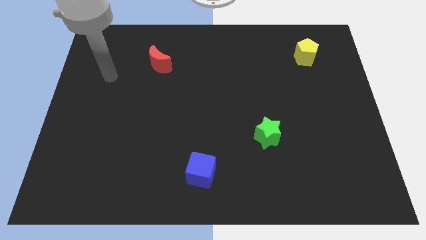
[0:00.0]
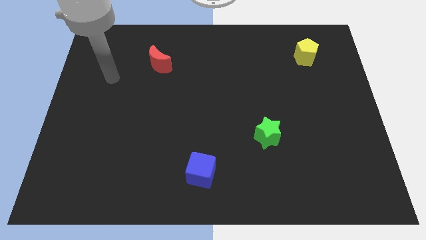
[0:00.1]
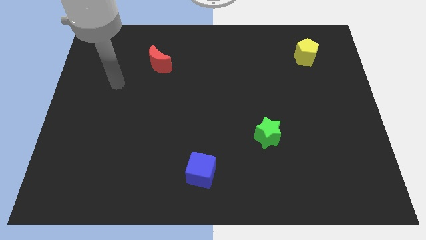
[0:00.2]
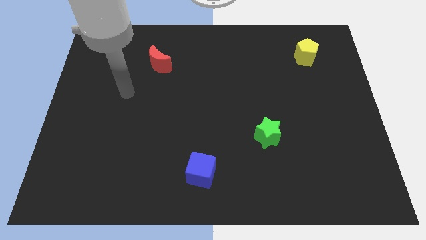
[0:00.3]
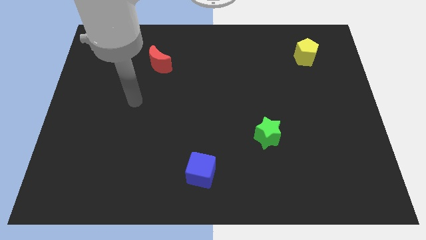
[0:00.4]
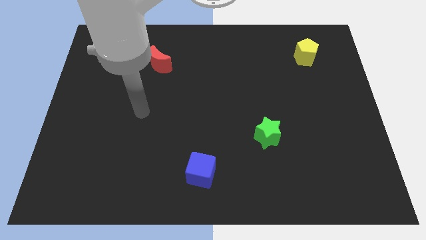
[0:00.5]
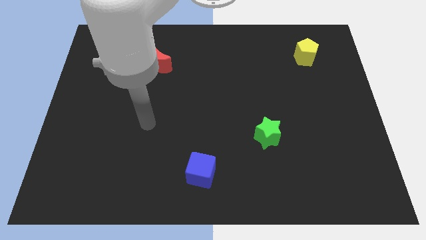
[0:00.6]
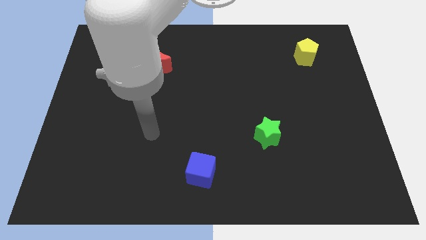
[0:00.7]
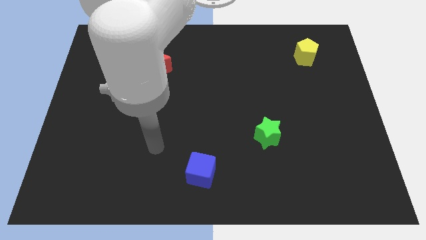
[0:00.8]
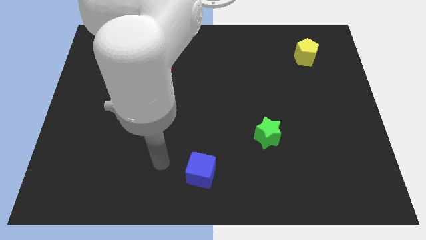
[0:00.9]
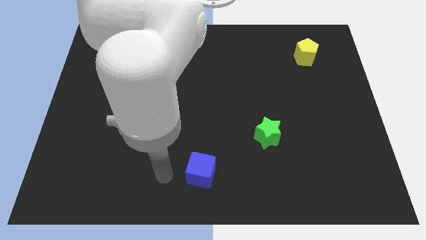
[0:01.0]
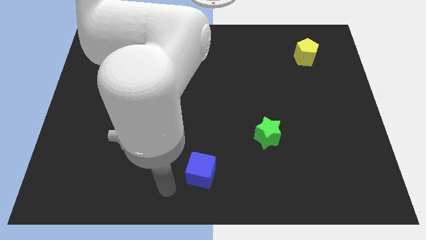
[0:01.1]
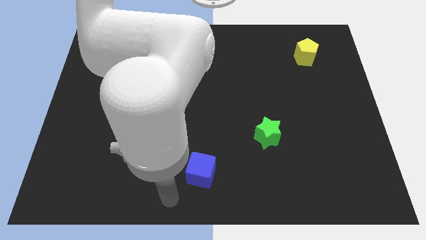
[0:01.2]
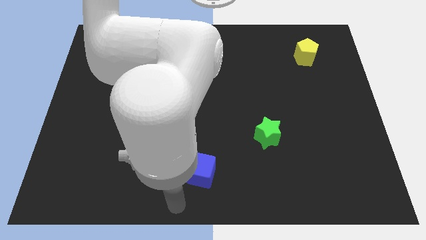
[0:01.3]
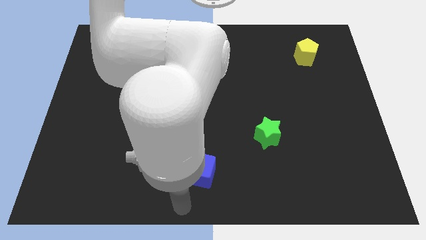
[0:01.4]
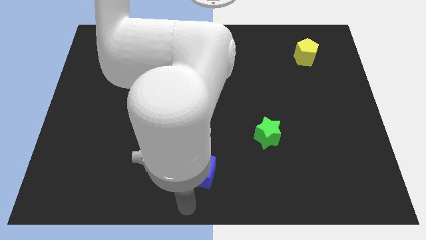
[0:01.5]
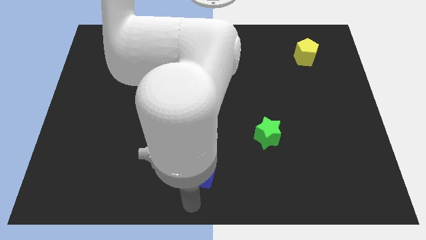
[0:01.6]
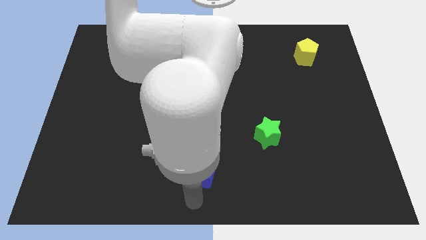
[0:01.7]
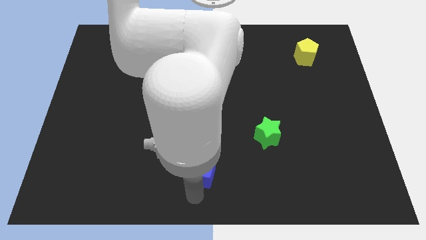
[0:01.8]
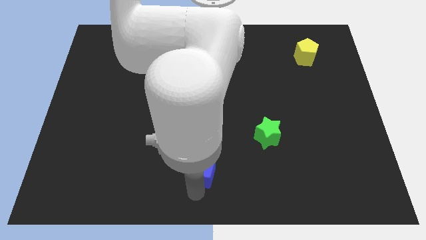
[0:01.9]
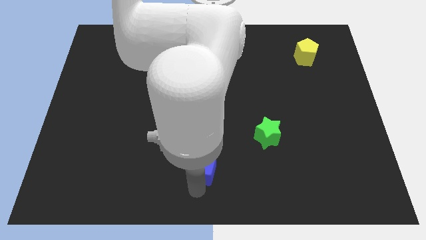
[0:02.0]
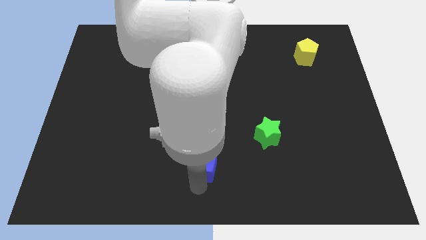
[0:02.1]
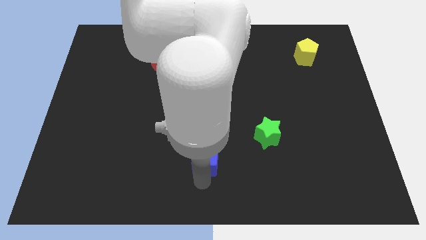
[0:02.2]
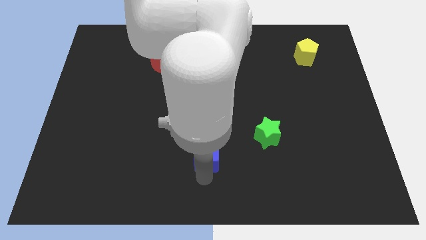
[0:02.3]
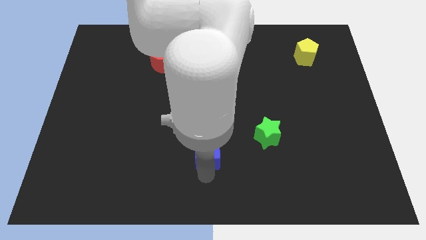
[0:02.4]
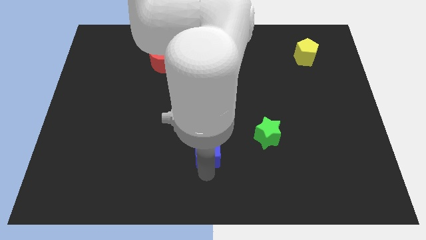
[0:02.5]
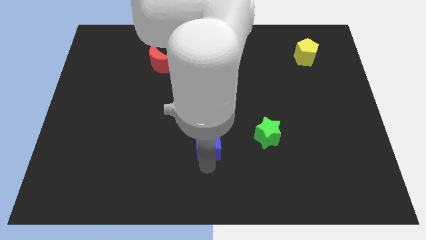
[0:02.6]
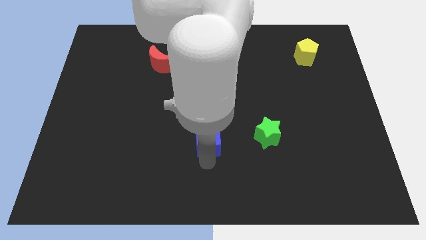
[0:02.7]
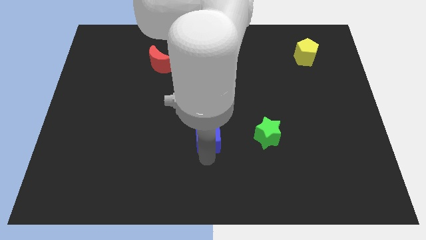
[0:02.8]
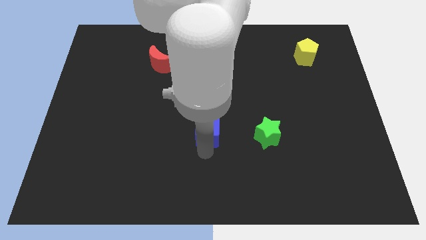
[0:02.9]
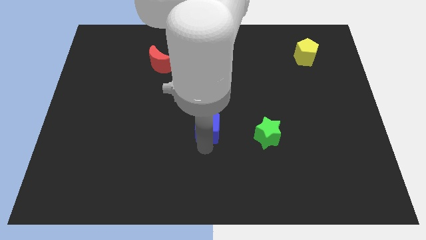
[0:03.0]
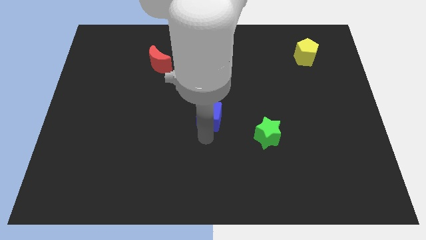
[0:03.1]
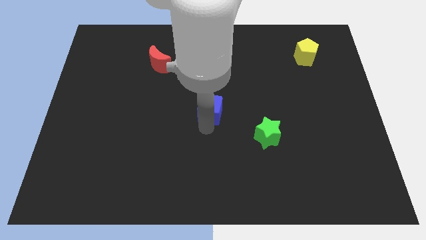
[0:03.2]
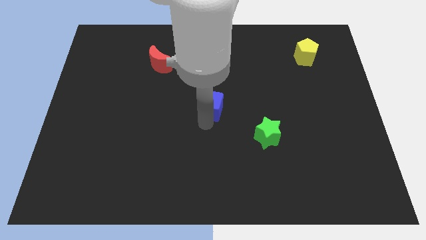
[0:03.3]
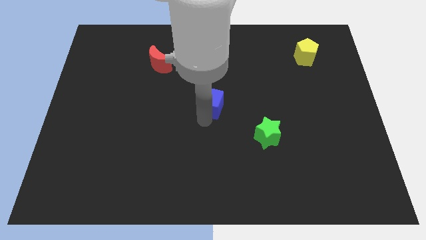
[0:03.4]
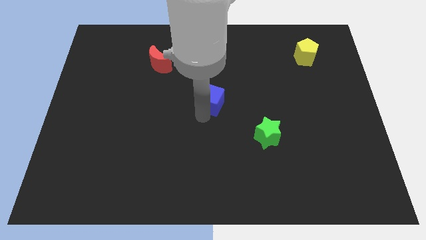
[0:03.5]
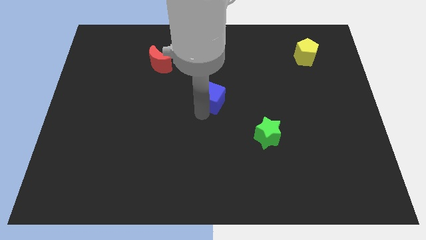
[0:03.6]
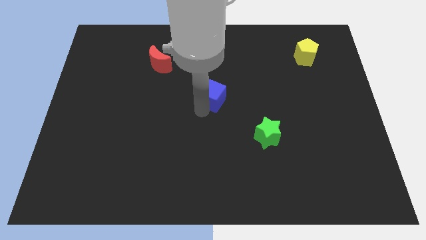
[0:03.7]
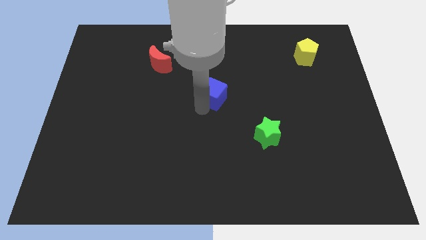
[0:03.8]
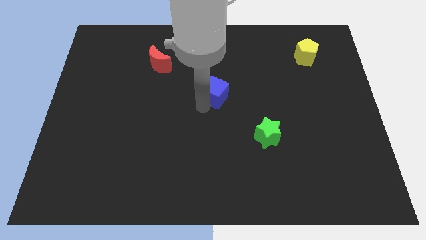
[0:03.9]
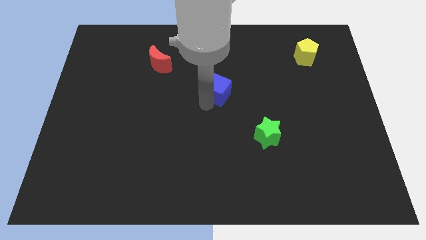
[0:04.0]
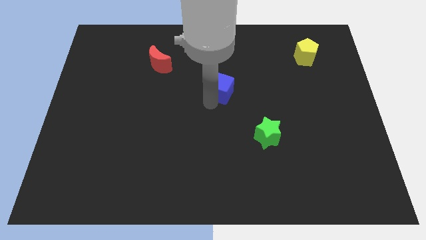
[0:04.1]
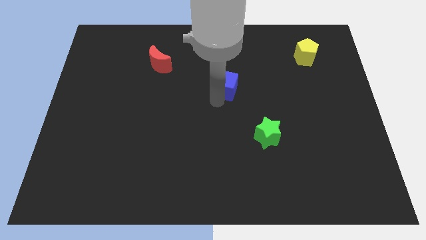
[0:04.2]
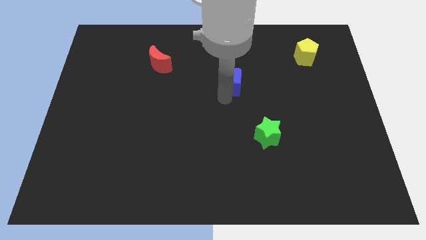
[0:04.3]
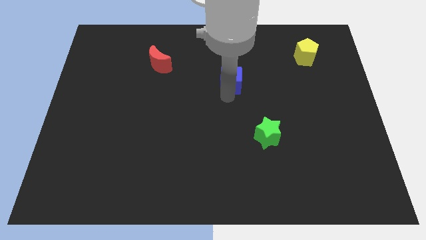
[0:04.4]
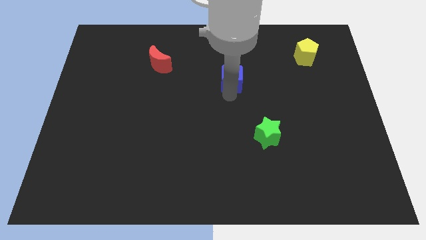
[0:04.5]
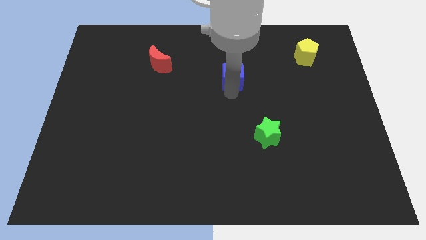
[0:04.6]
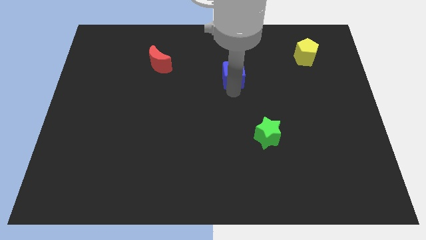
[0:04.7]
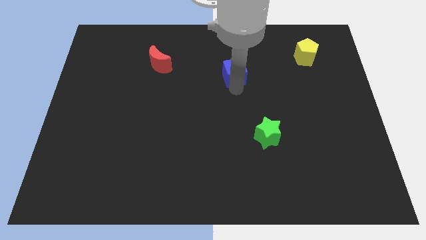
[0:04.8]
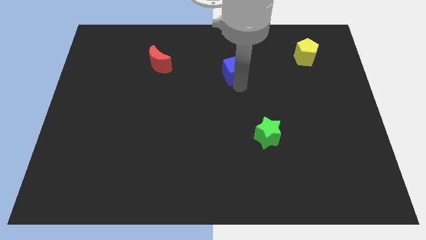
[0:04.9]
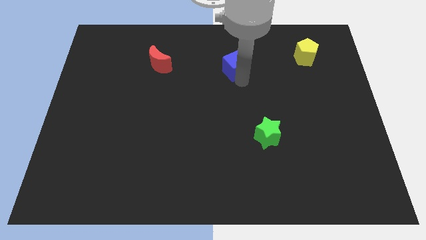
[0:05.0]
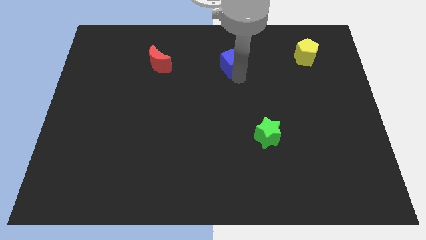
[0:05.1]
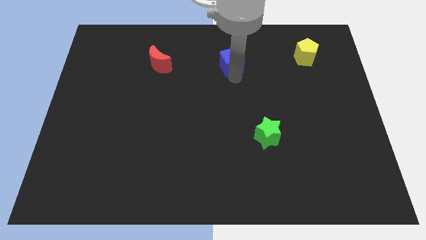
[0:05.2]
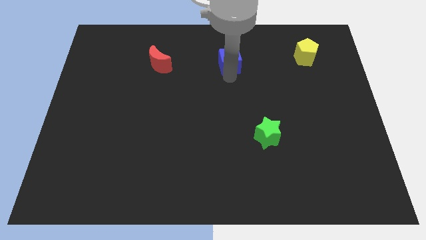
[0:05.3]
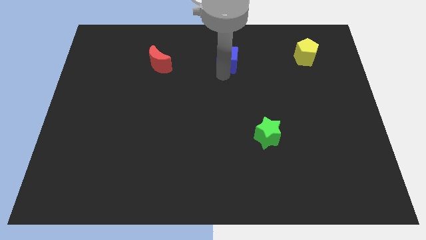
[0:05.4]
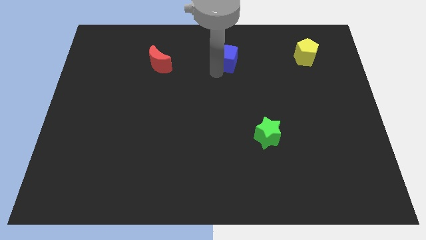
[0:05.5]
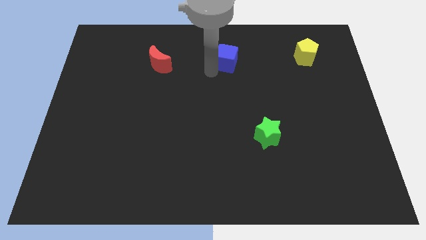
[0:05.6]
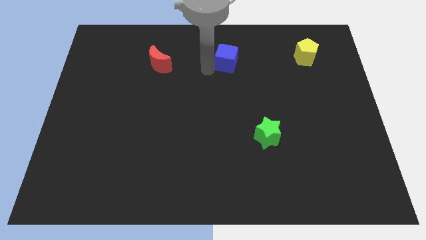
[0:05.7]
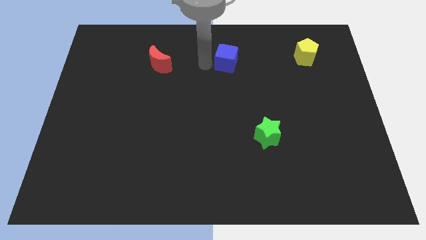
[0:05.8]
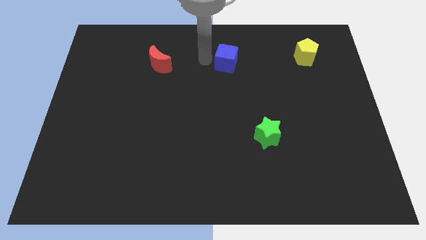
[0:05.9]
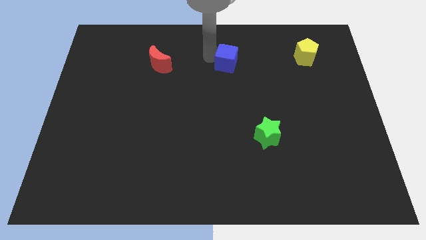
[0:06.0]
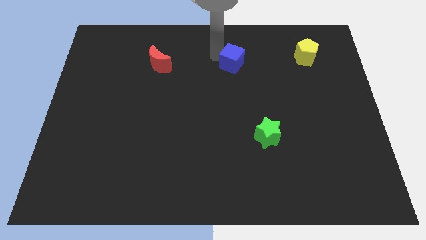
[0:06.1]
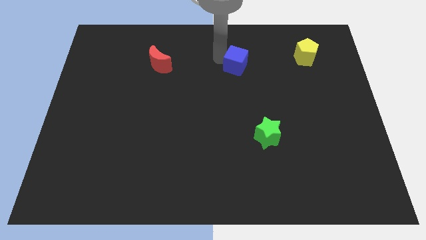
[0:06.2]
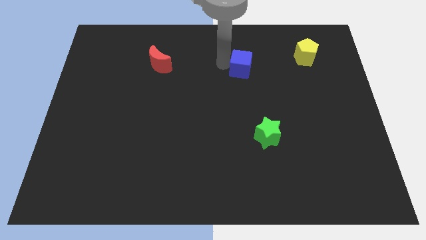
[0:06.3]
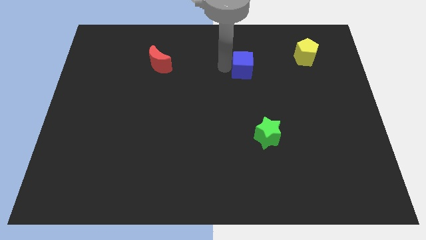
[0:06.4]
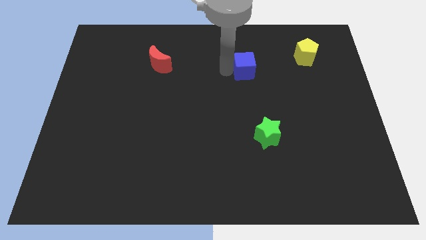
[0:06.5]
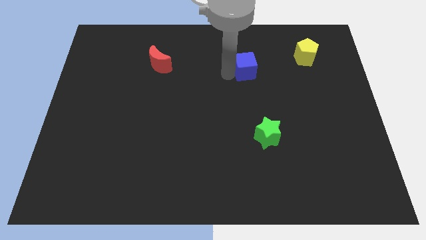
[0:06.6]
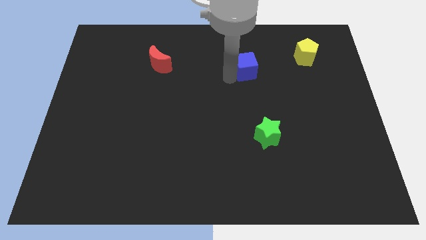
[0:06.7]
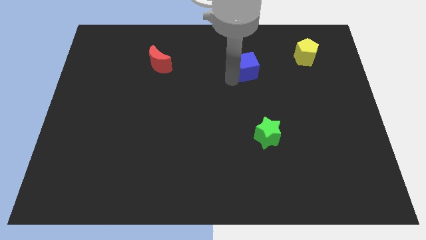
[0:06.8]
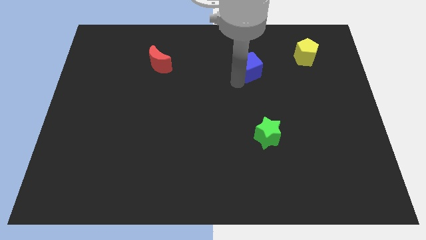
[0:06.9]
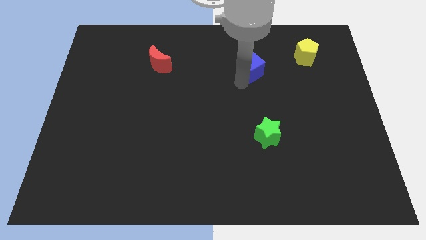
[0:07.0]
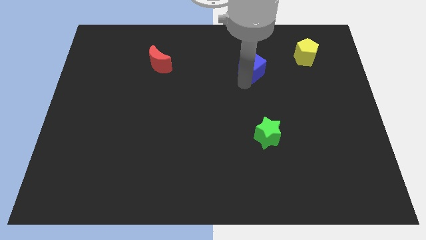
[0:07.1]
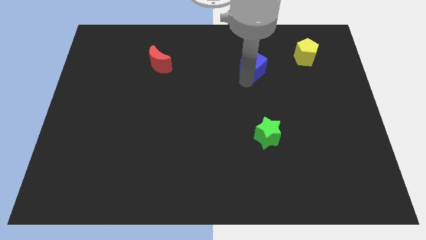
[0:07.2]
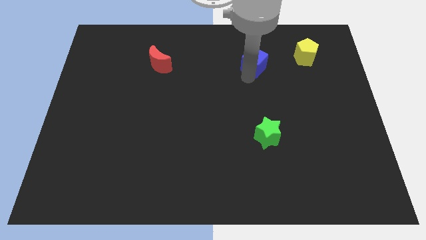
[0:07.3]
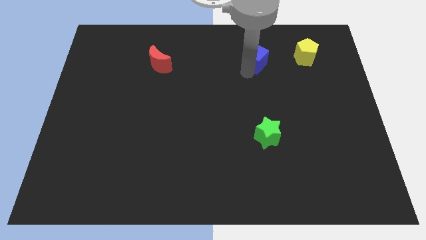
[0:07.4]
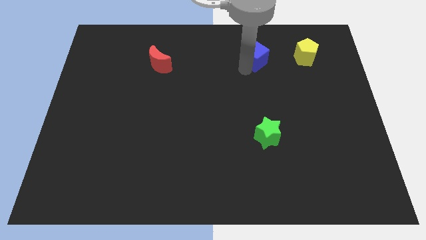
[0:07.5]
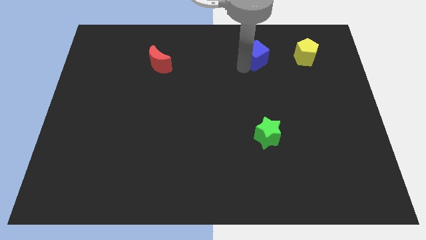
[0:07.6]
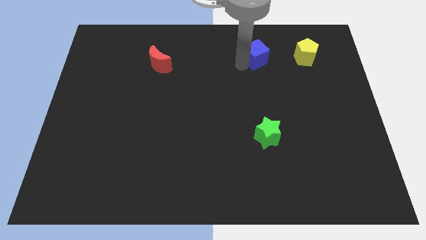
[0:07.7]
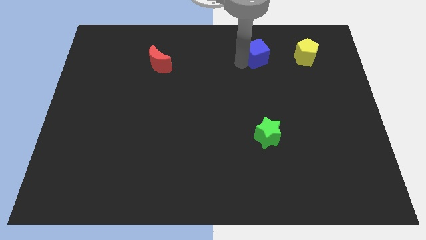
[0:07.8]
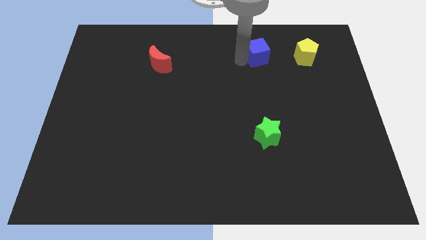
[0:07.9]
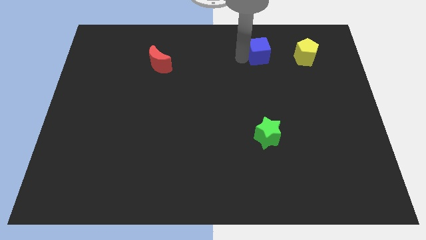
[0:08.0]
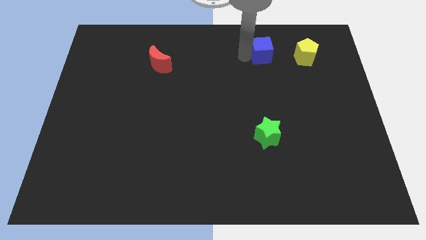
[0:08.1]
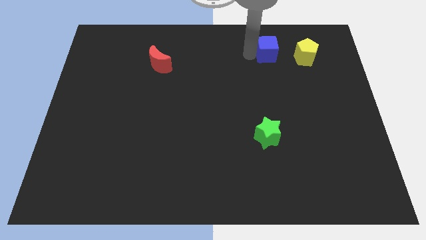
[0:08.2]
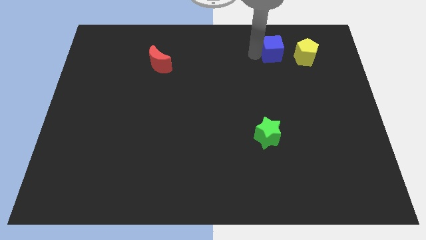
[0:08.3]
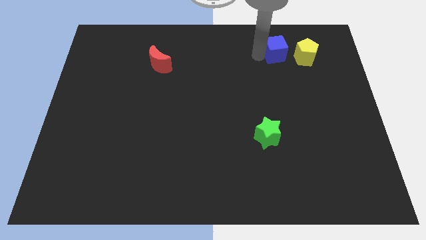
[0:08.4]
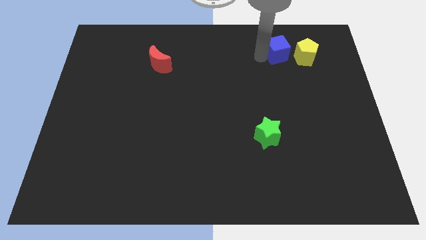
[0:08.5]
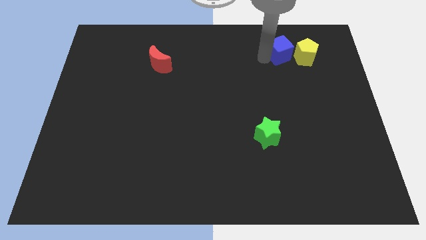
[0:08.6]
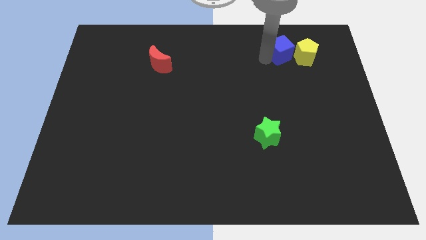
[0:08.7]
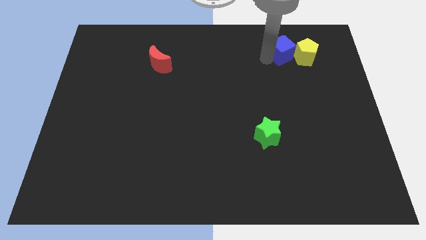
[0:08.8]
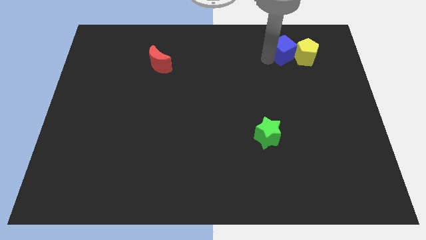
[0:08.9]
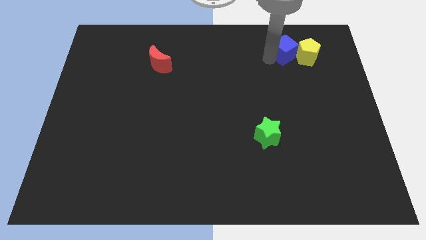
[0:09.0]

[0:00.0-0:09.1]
push the cube towards the yellow block
